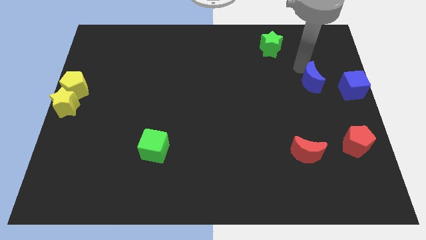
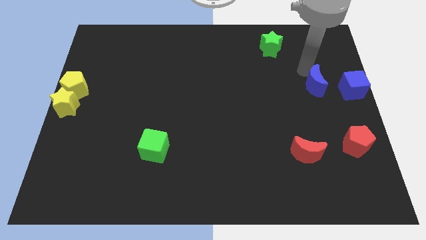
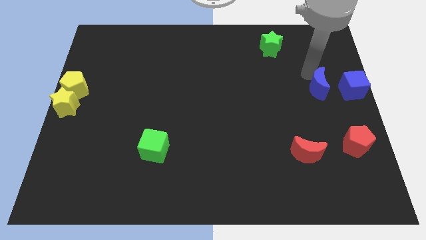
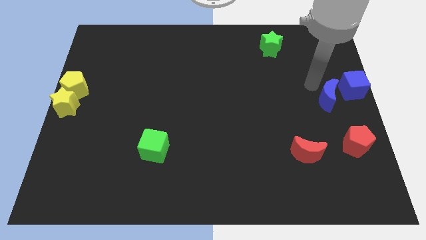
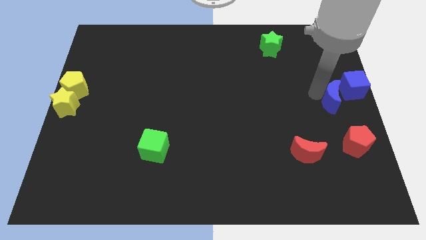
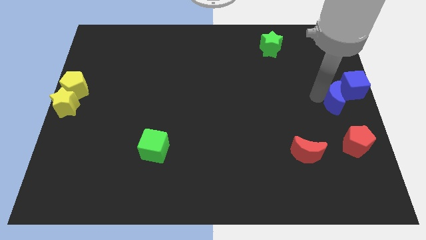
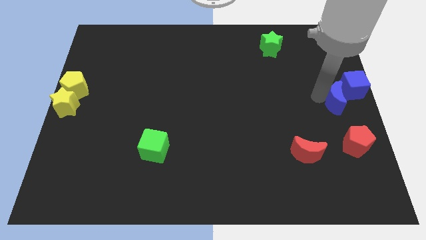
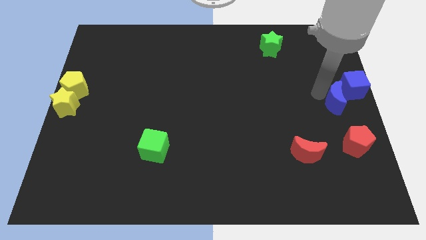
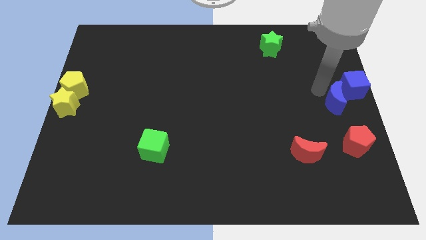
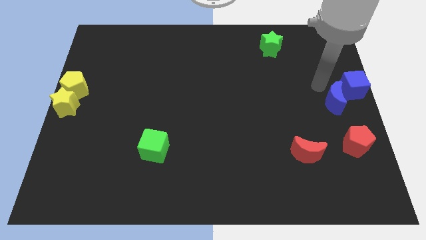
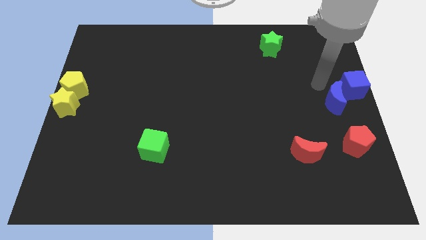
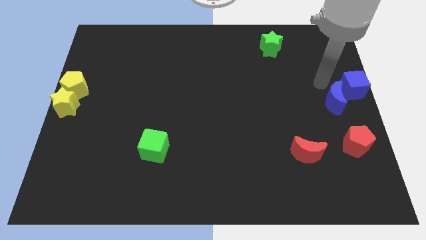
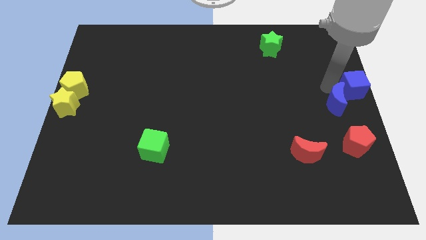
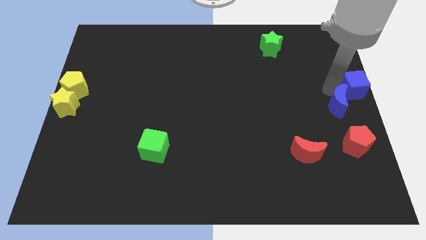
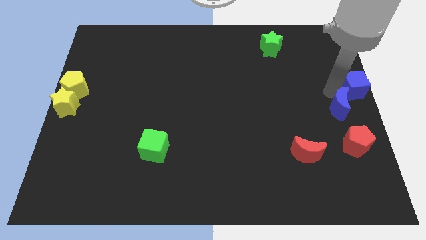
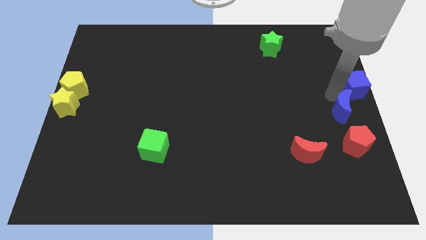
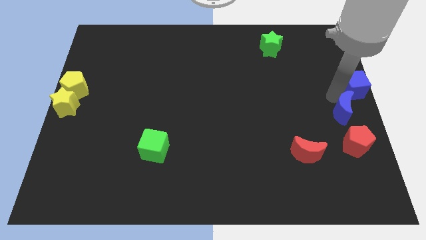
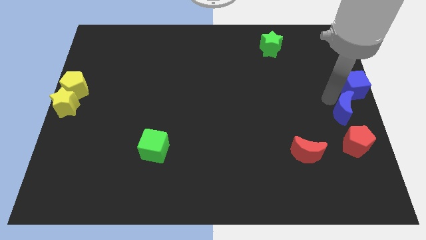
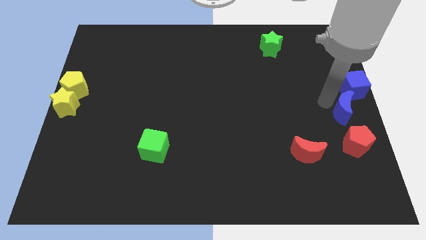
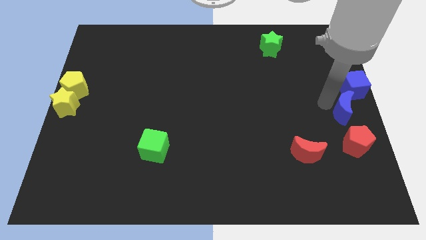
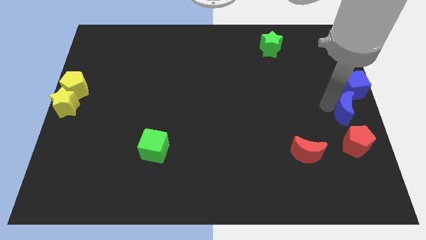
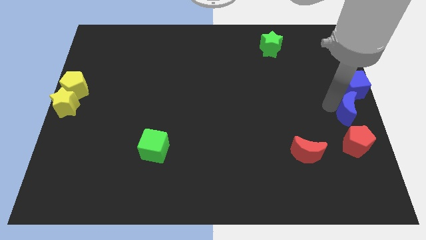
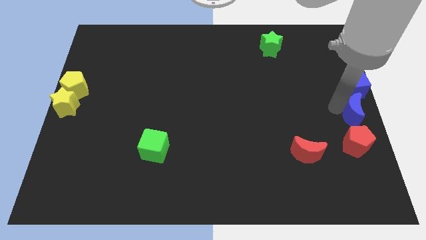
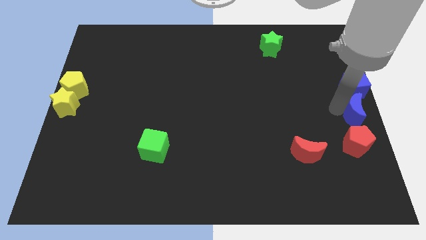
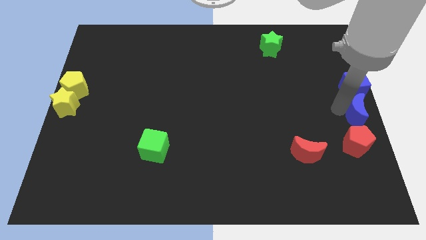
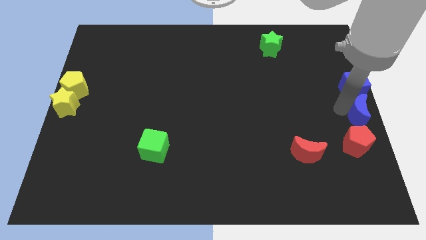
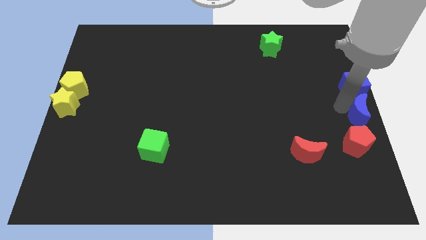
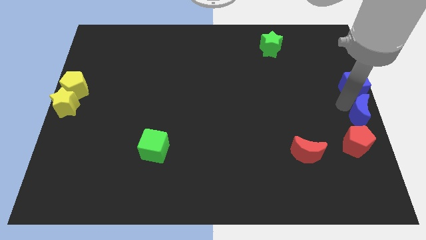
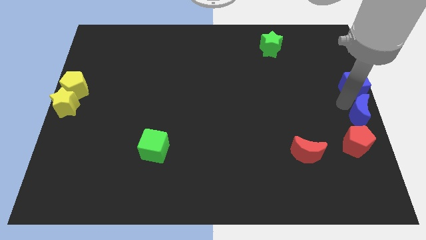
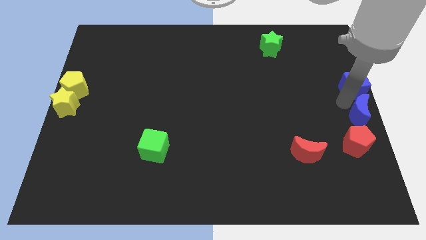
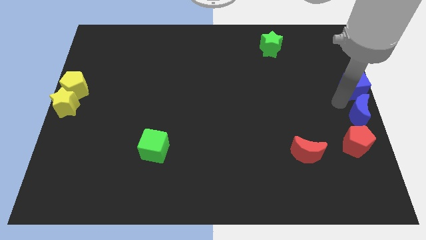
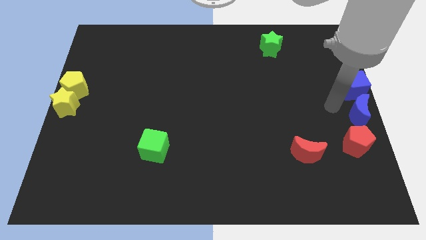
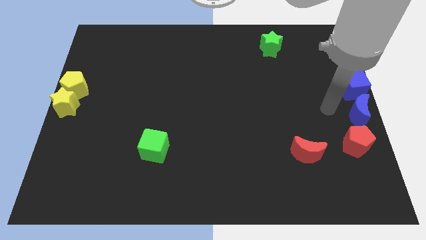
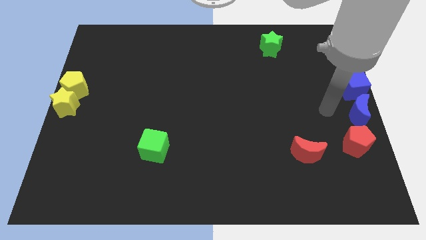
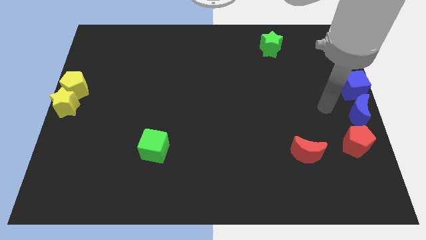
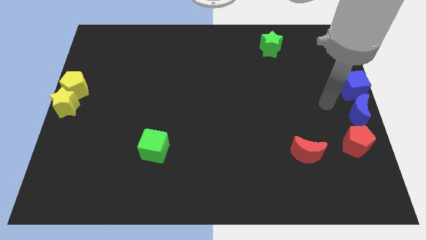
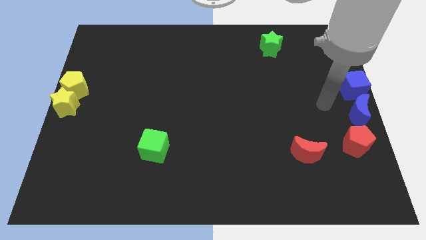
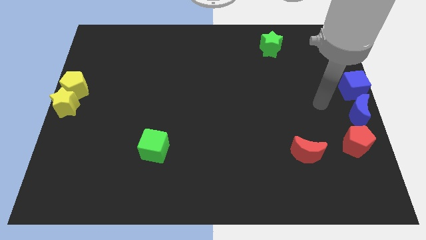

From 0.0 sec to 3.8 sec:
move the blue crescent below the blue cube

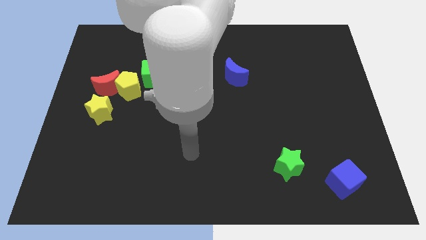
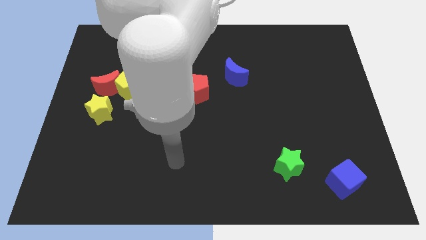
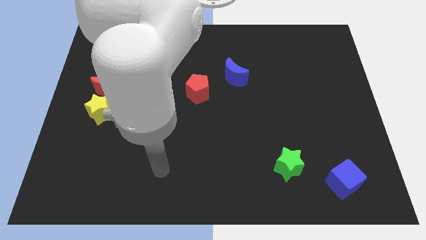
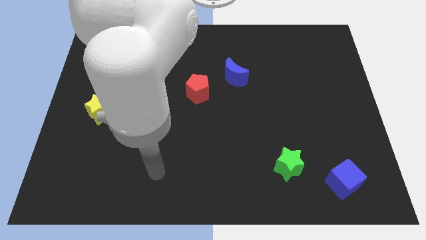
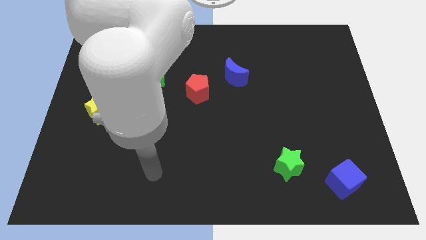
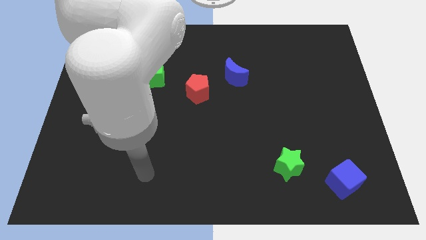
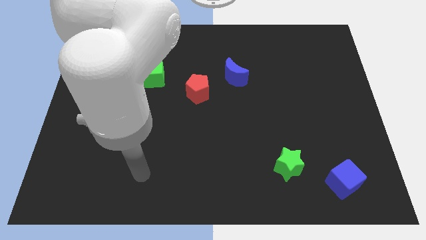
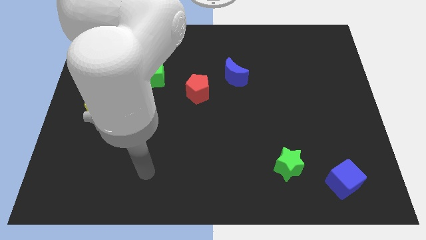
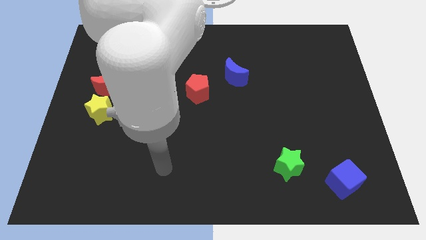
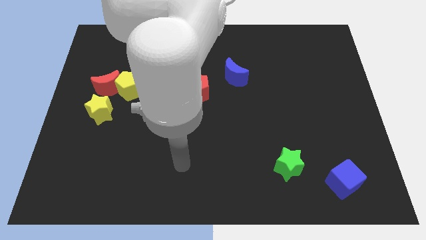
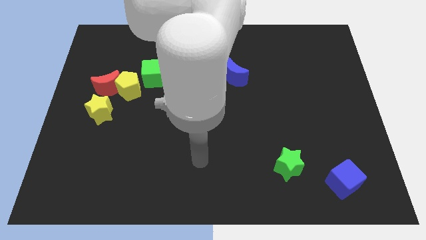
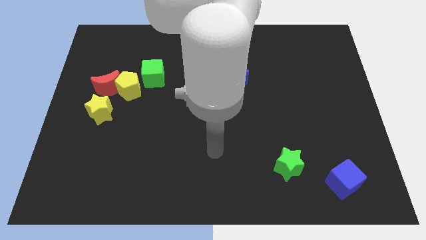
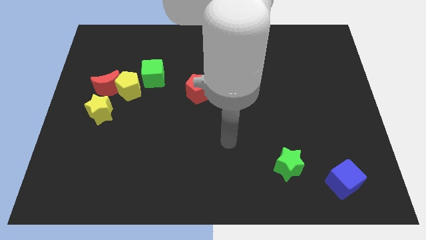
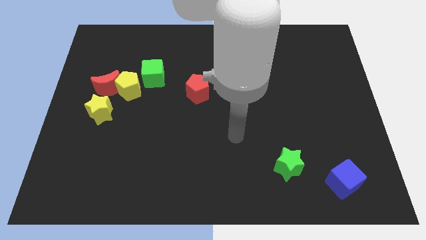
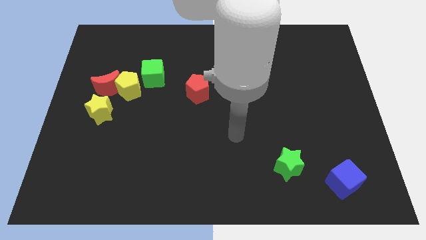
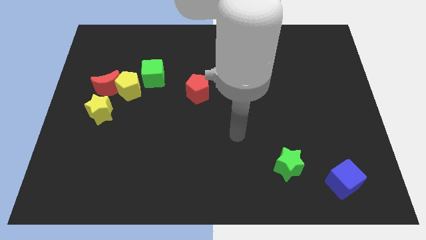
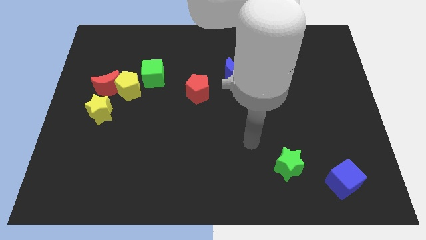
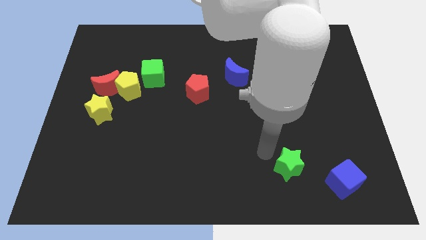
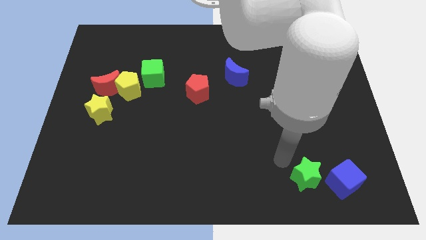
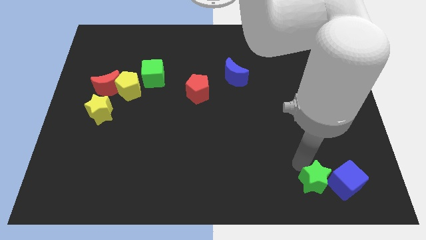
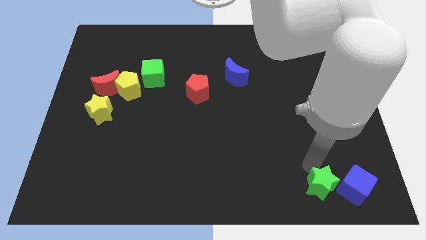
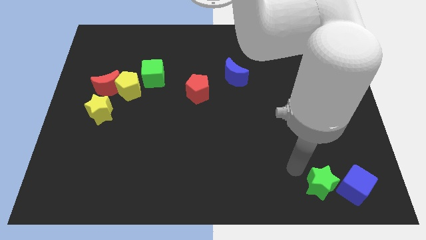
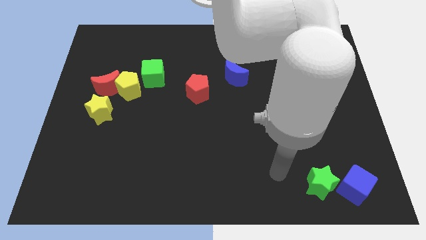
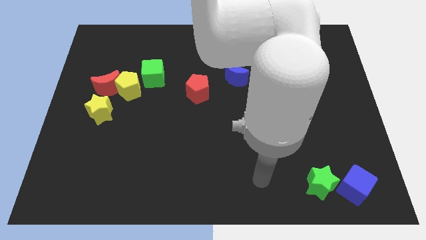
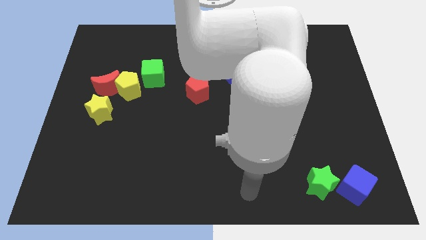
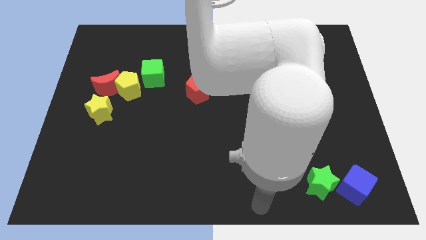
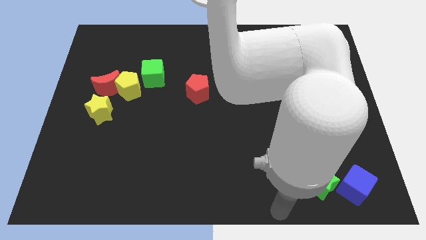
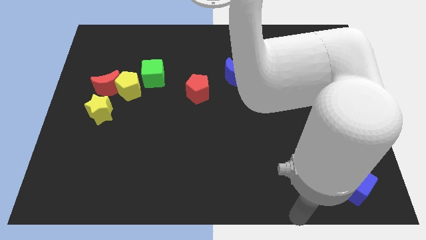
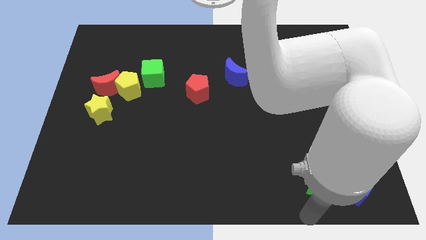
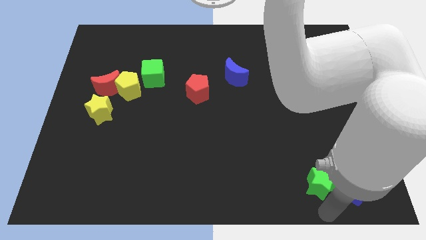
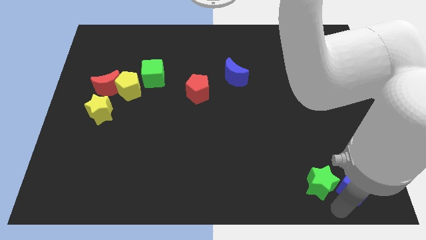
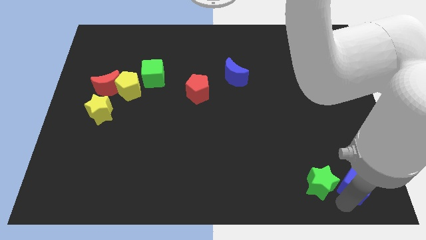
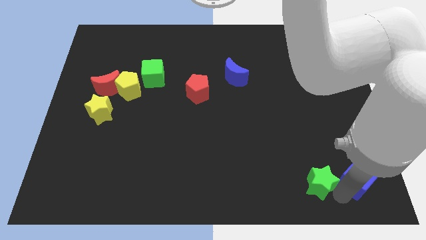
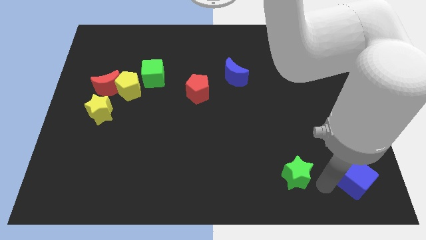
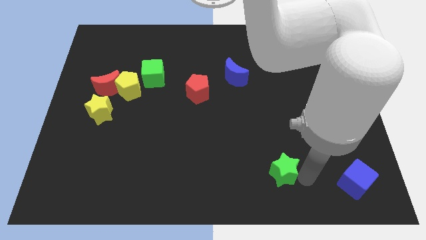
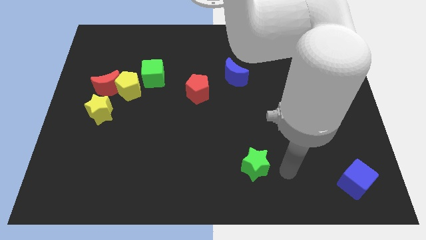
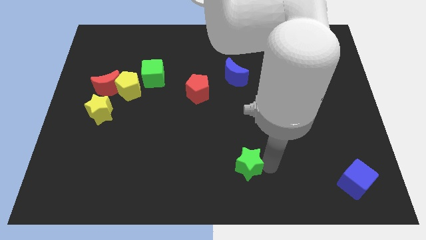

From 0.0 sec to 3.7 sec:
separate green star from the blue cube

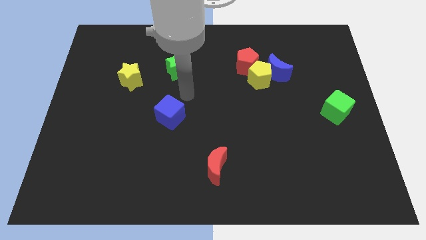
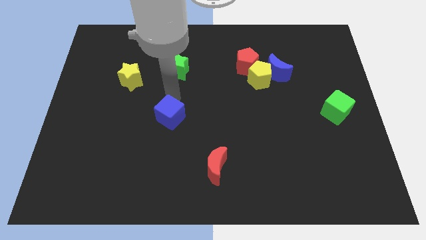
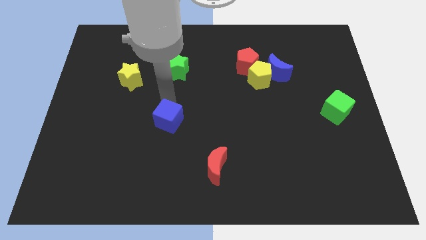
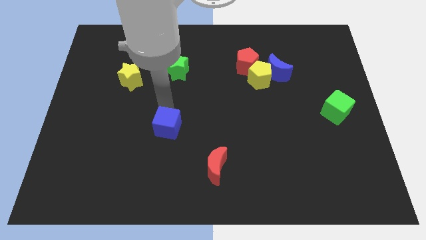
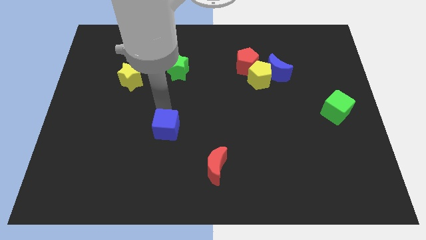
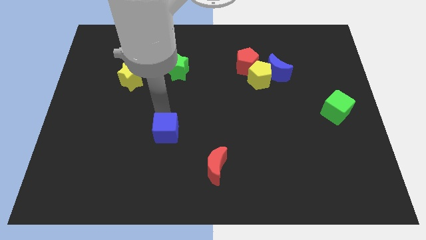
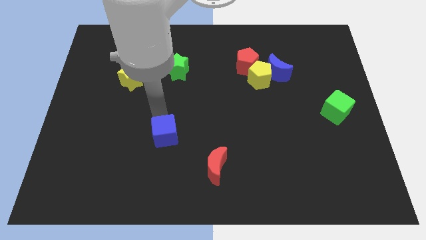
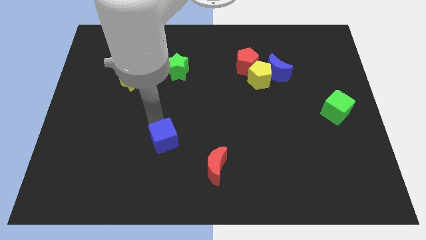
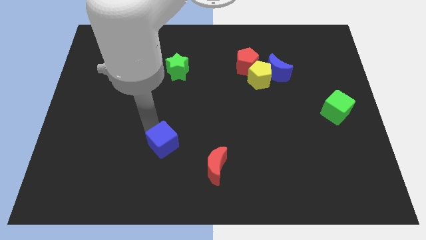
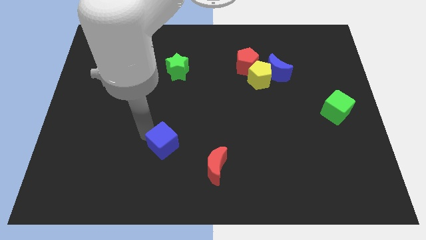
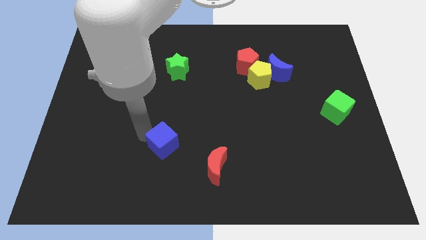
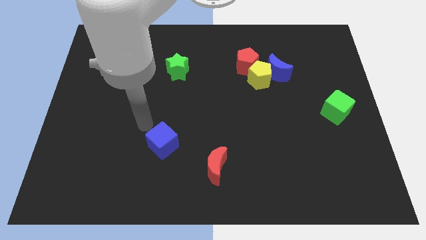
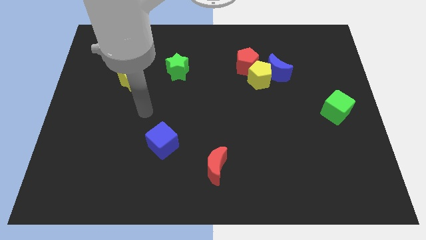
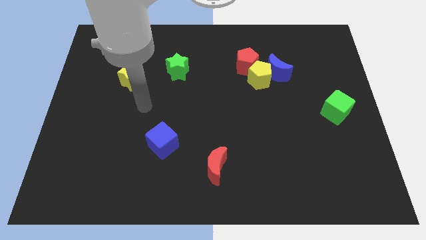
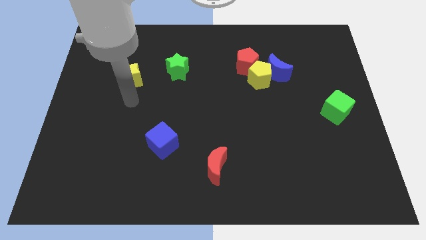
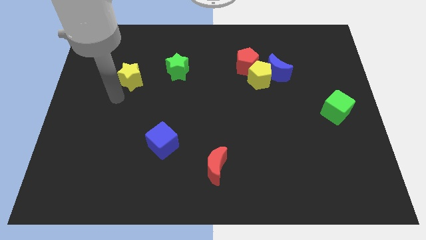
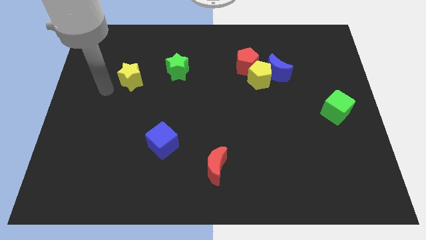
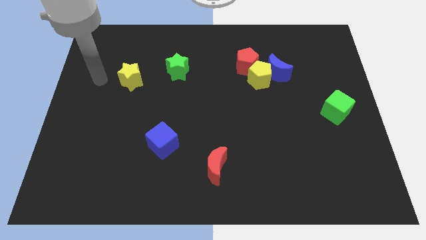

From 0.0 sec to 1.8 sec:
slide the blue cube to the bottom side
